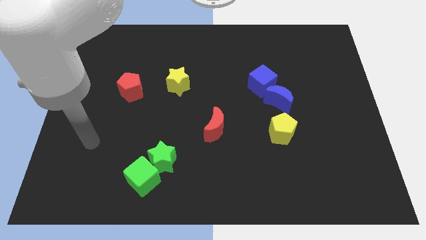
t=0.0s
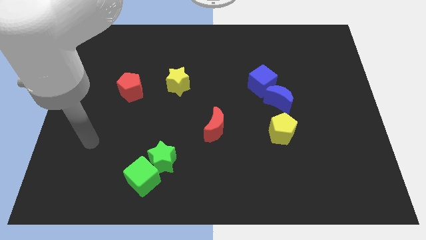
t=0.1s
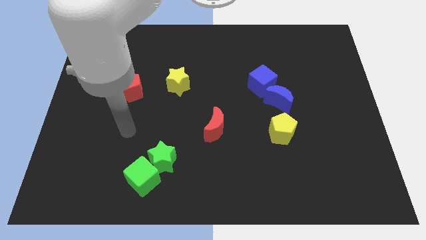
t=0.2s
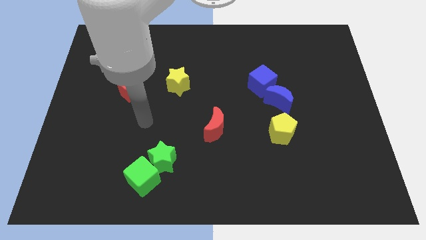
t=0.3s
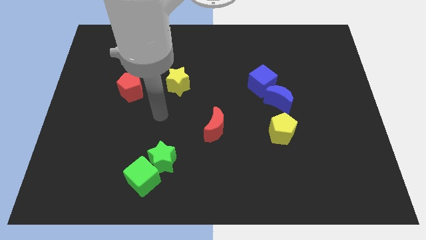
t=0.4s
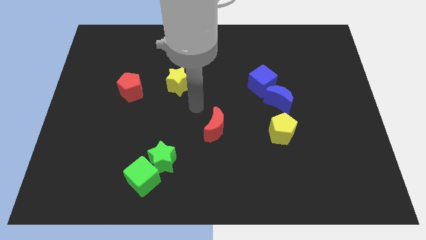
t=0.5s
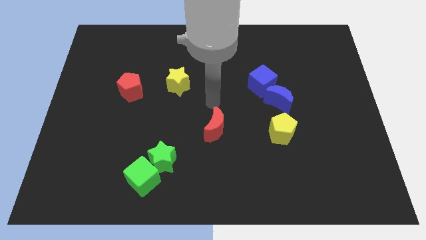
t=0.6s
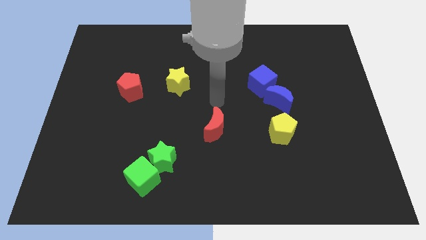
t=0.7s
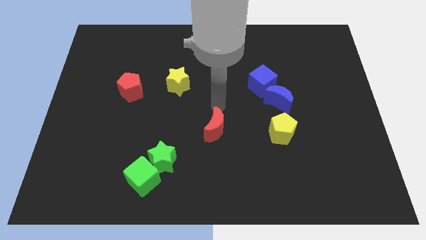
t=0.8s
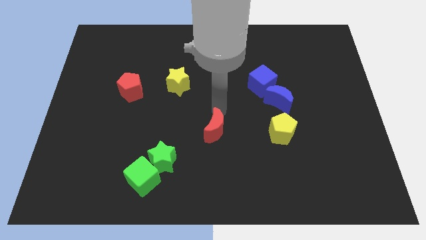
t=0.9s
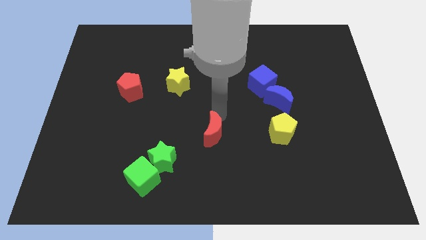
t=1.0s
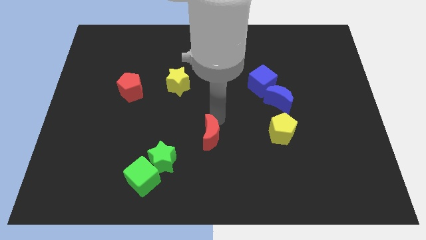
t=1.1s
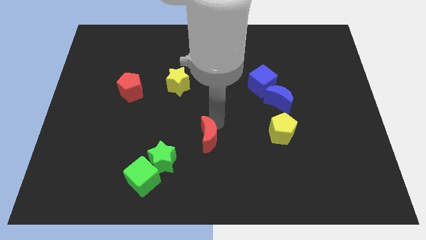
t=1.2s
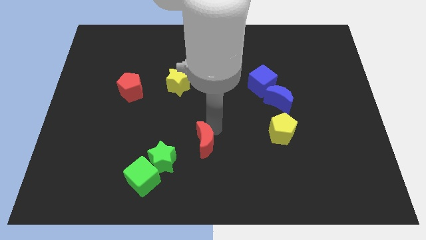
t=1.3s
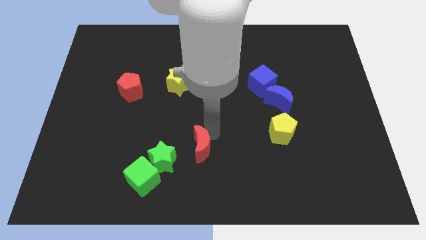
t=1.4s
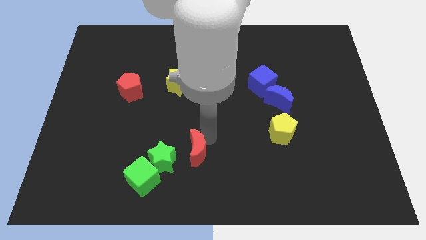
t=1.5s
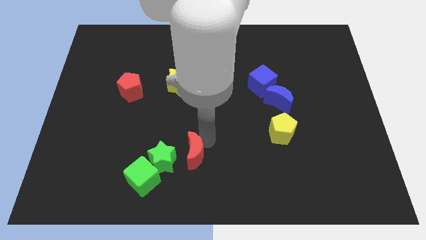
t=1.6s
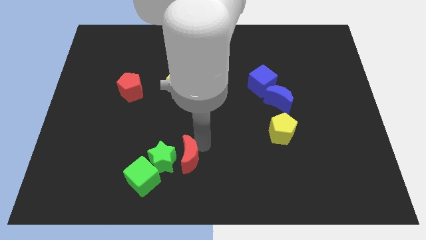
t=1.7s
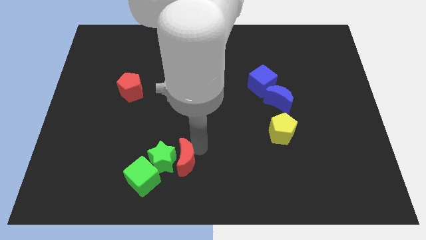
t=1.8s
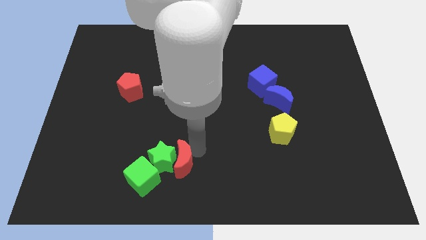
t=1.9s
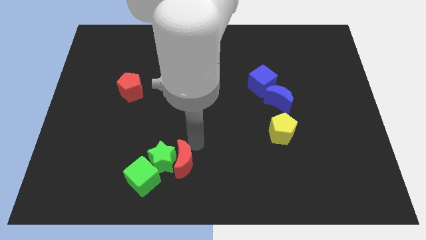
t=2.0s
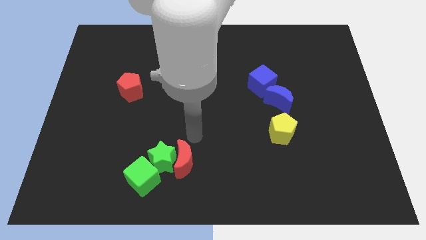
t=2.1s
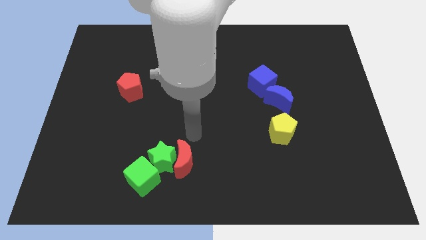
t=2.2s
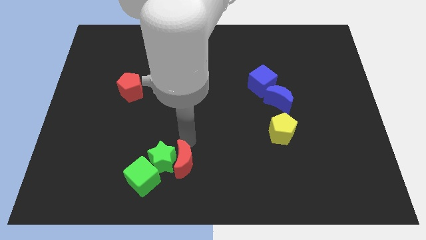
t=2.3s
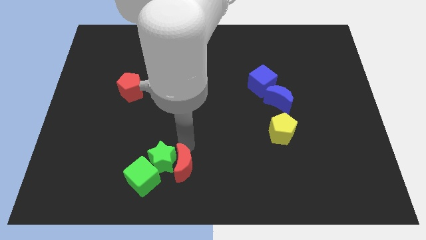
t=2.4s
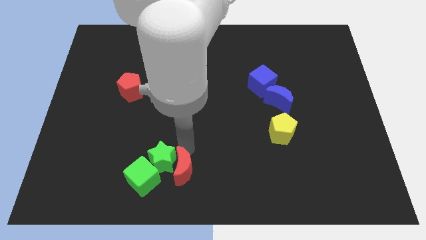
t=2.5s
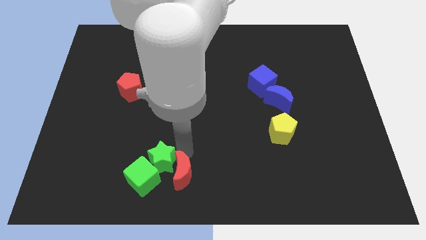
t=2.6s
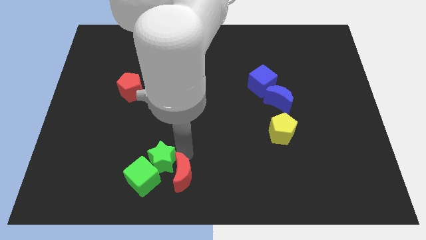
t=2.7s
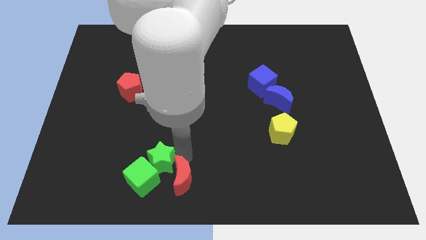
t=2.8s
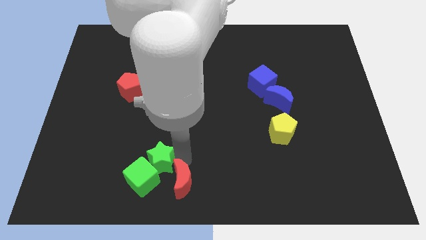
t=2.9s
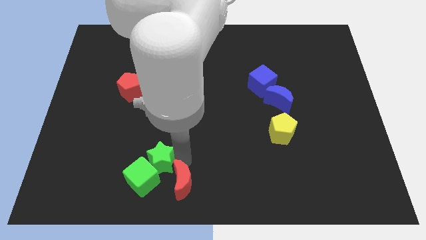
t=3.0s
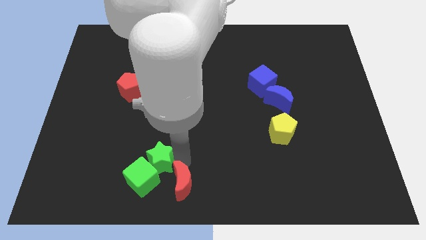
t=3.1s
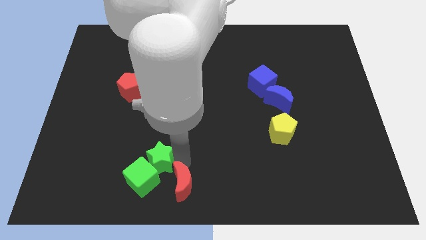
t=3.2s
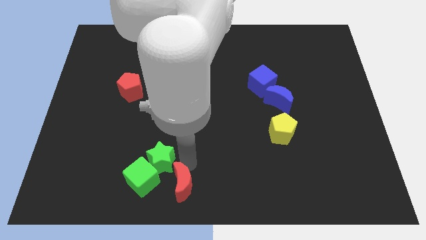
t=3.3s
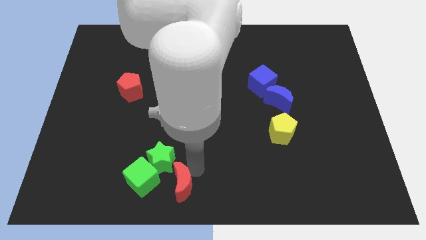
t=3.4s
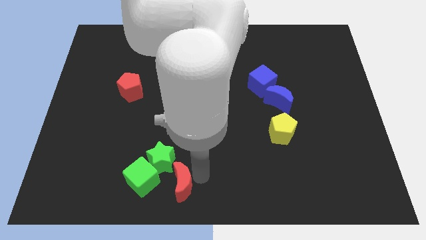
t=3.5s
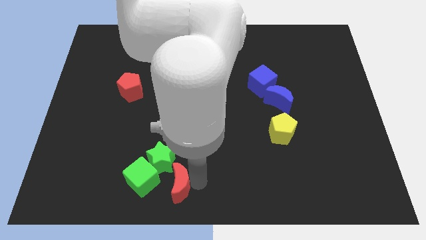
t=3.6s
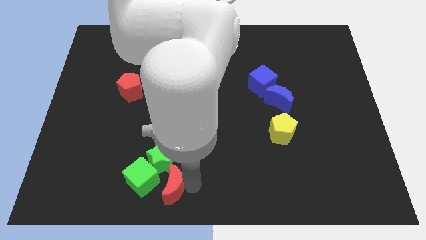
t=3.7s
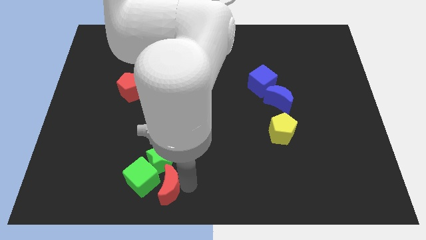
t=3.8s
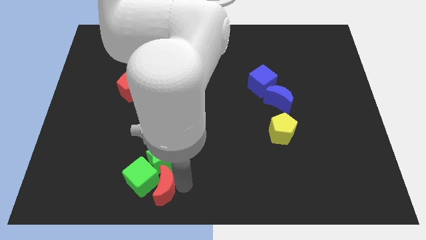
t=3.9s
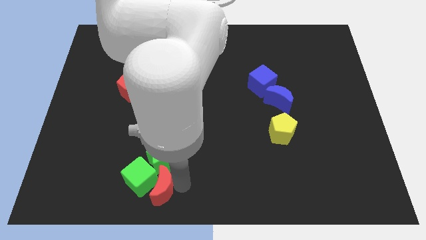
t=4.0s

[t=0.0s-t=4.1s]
slide the red moon close to the green cube

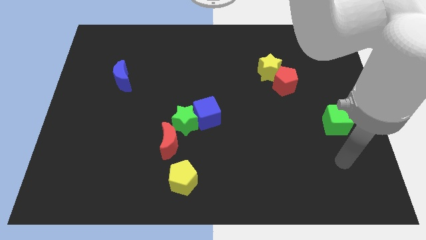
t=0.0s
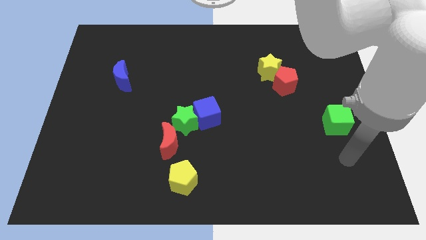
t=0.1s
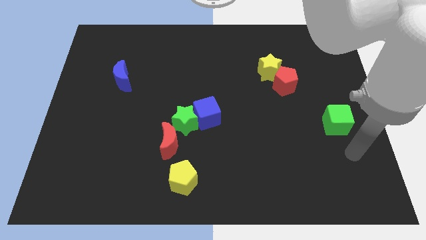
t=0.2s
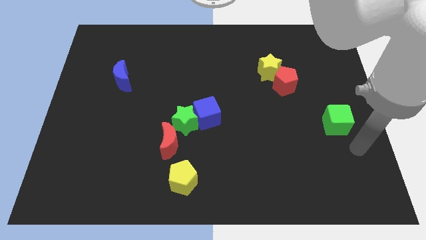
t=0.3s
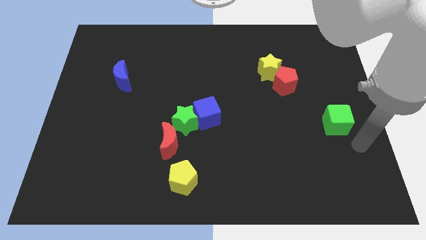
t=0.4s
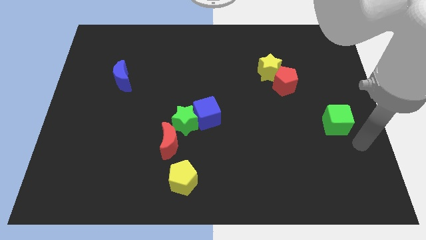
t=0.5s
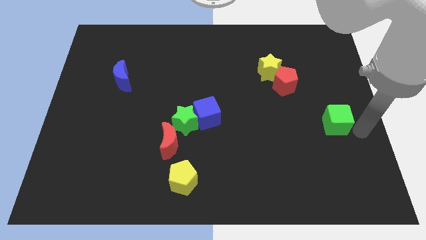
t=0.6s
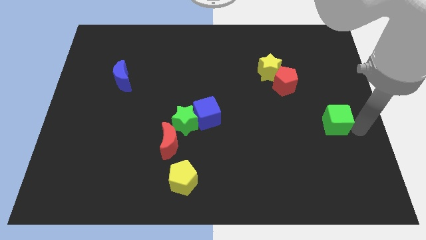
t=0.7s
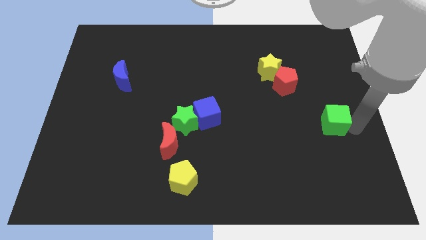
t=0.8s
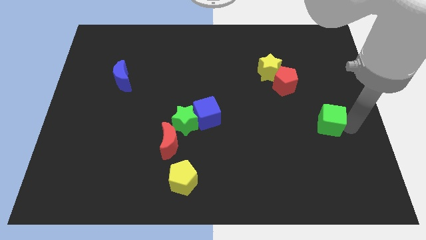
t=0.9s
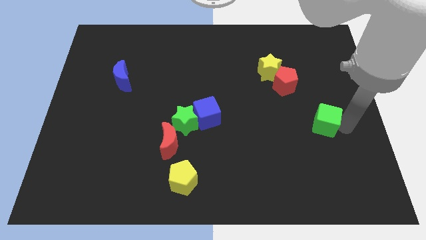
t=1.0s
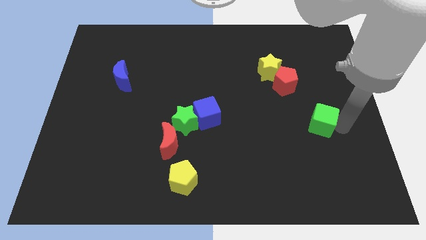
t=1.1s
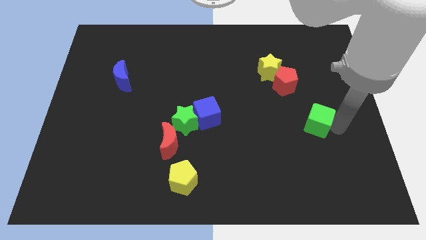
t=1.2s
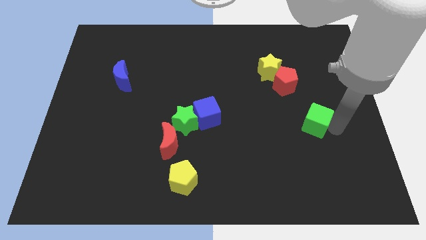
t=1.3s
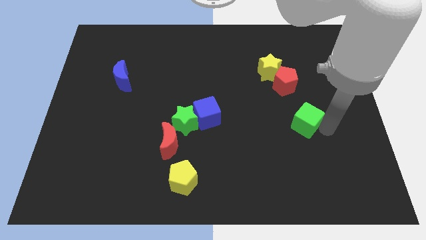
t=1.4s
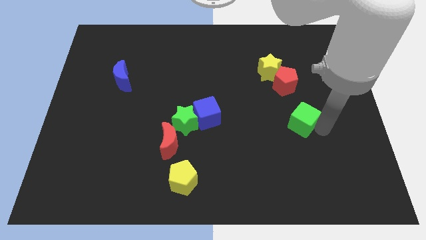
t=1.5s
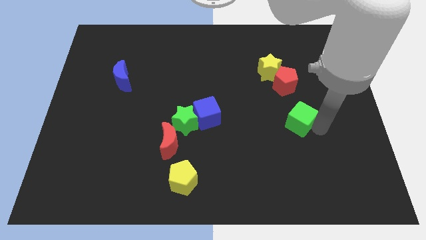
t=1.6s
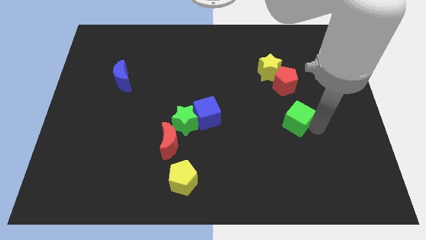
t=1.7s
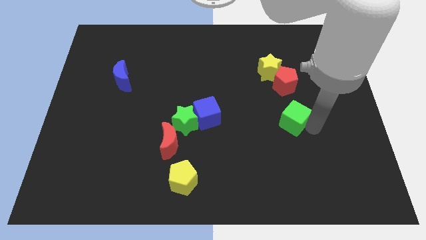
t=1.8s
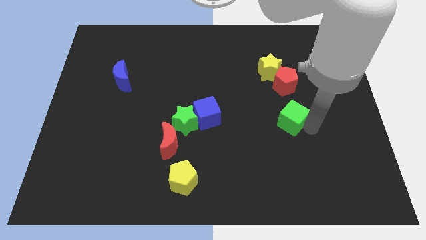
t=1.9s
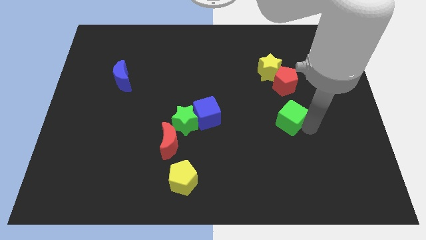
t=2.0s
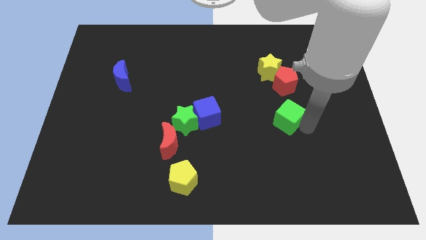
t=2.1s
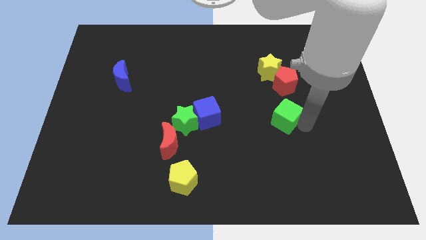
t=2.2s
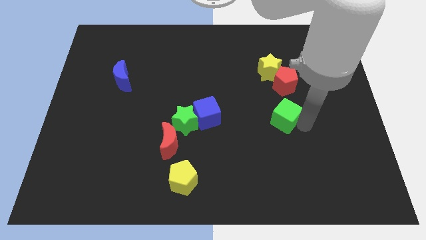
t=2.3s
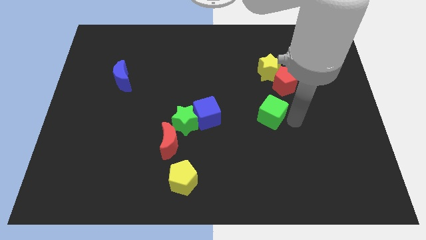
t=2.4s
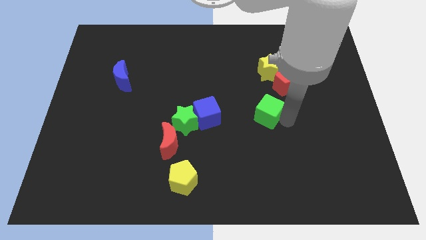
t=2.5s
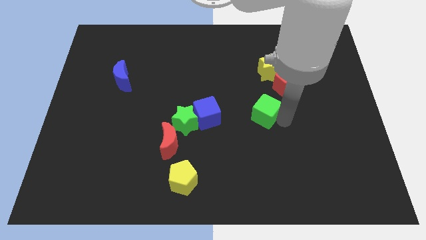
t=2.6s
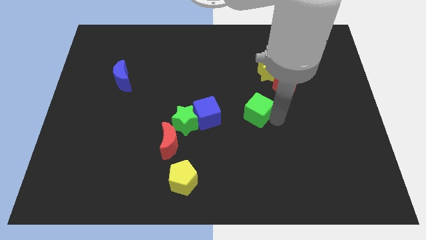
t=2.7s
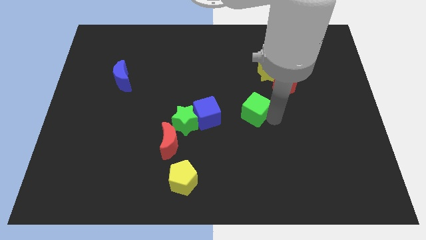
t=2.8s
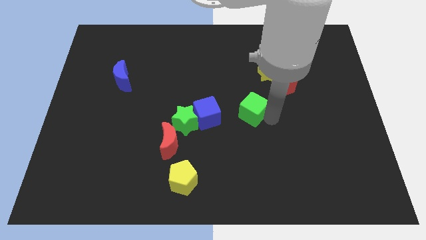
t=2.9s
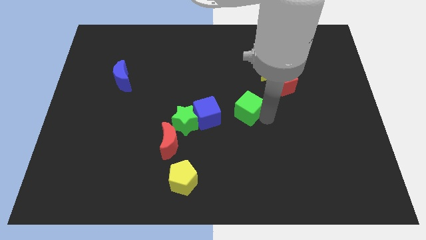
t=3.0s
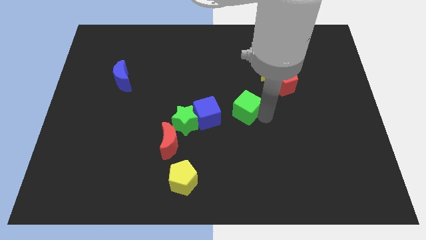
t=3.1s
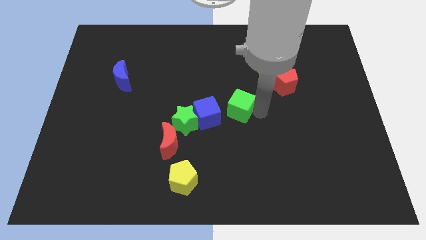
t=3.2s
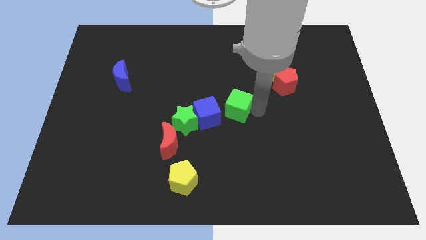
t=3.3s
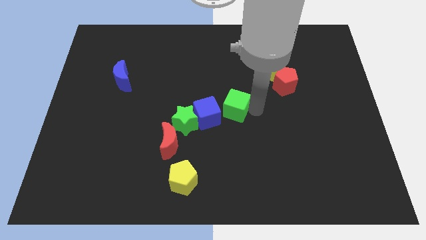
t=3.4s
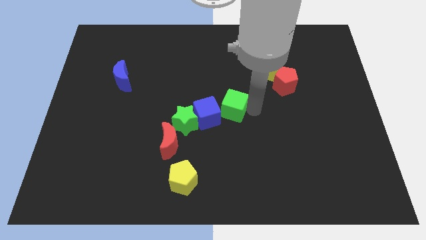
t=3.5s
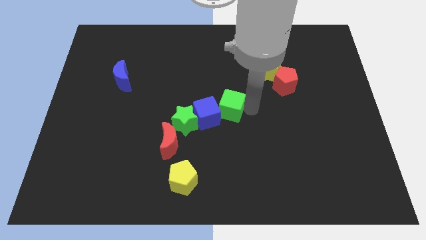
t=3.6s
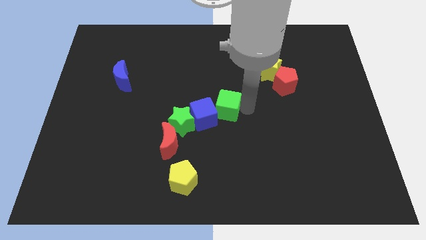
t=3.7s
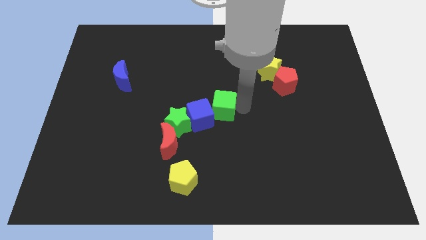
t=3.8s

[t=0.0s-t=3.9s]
slide the green cube next to the blue cube

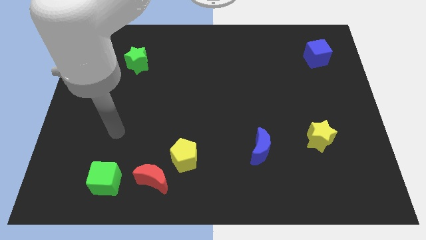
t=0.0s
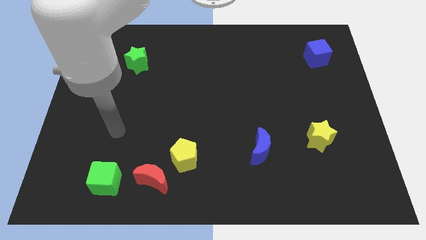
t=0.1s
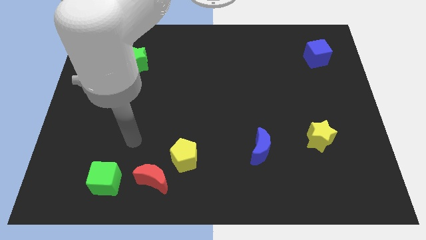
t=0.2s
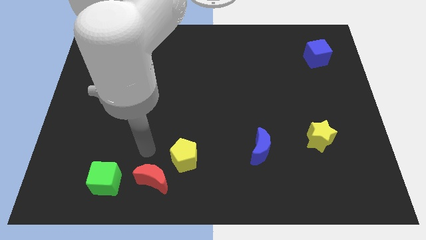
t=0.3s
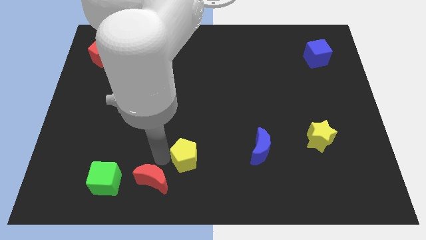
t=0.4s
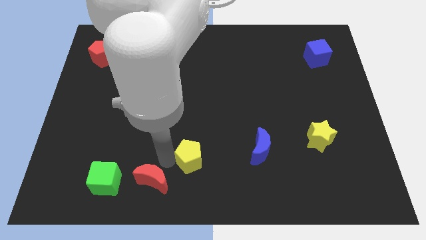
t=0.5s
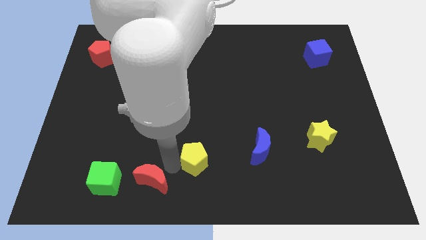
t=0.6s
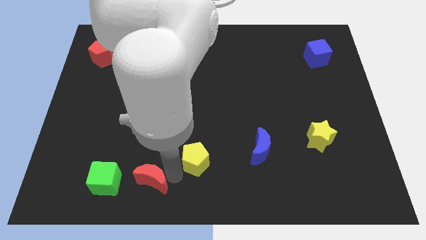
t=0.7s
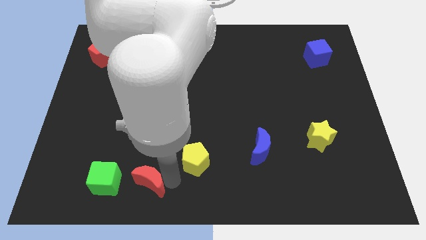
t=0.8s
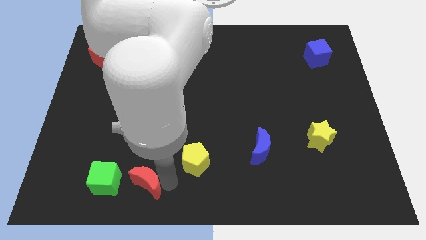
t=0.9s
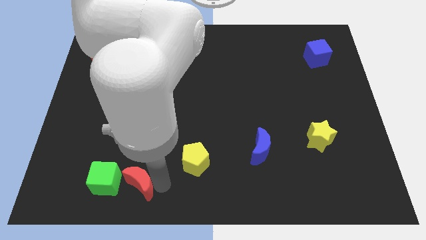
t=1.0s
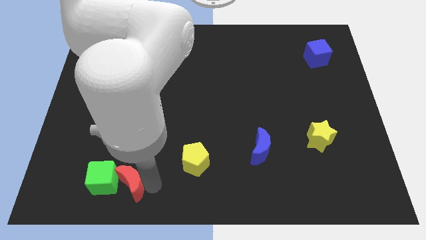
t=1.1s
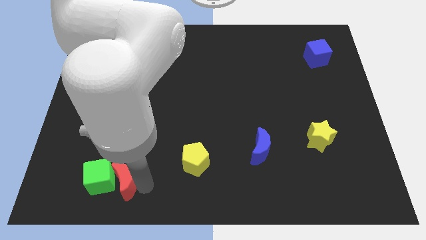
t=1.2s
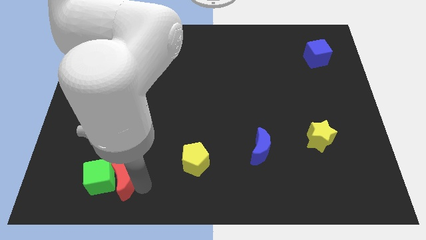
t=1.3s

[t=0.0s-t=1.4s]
push the red moon to the green cube
